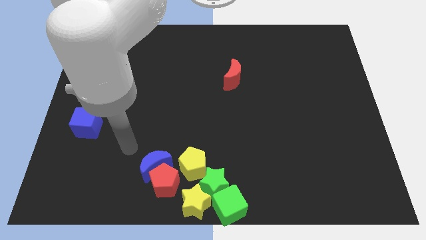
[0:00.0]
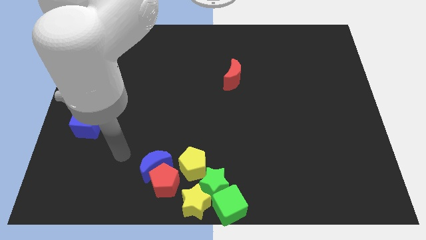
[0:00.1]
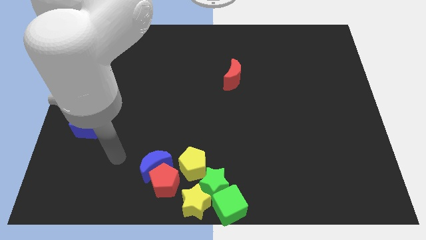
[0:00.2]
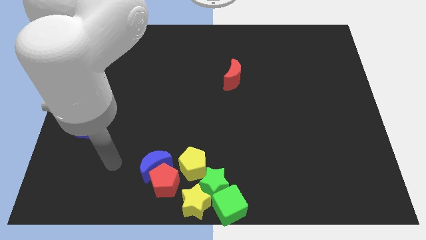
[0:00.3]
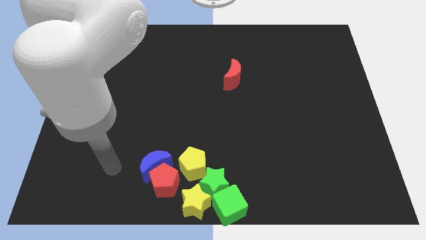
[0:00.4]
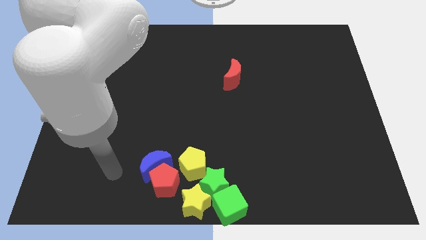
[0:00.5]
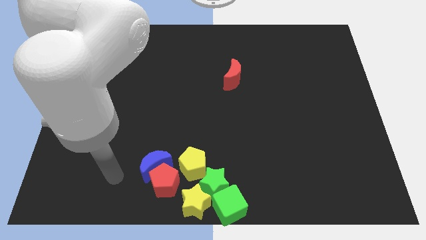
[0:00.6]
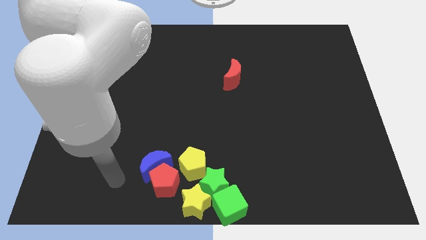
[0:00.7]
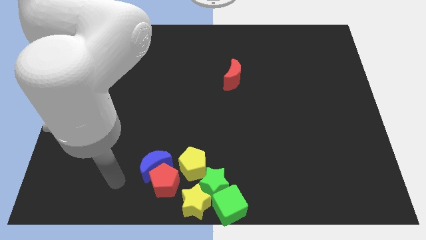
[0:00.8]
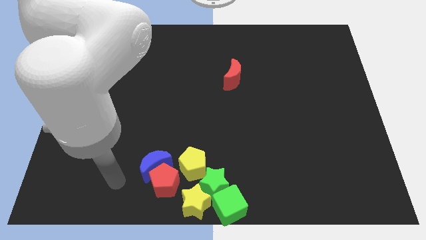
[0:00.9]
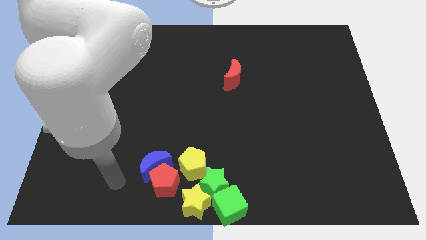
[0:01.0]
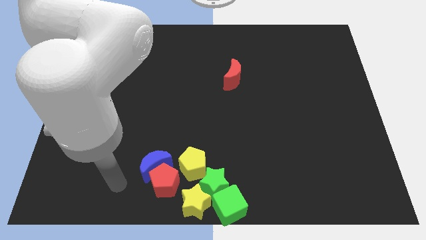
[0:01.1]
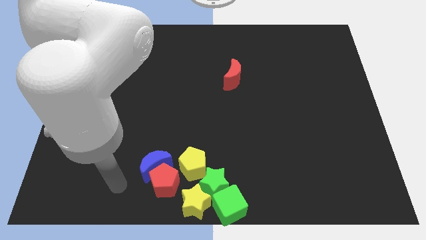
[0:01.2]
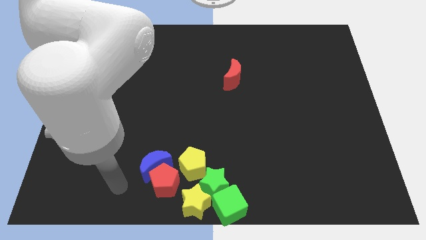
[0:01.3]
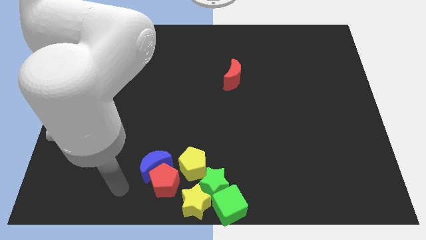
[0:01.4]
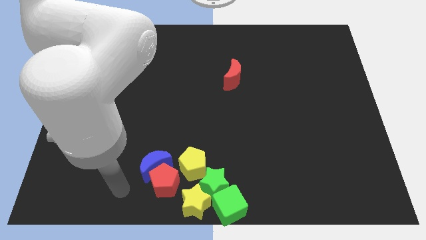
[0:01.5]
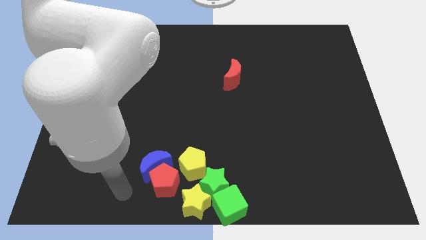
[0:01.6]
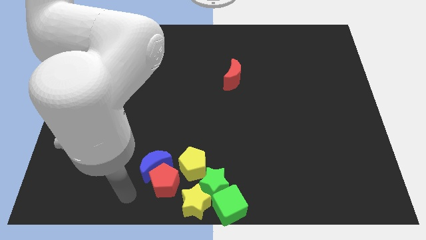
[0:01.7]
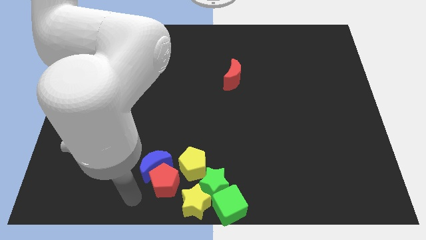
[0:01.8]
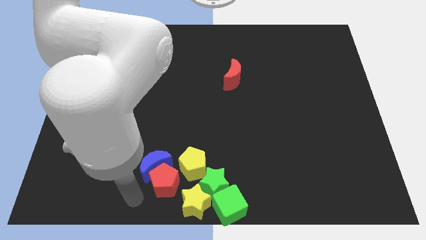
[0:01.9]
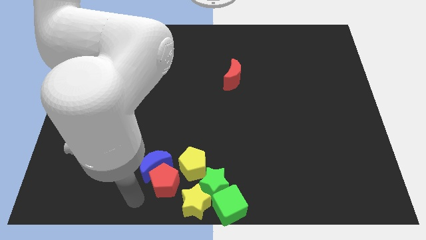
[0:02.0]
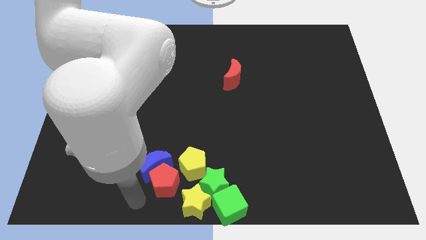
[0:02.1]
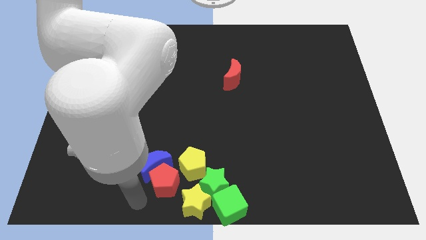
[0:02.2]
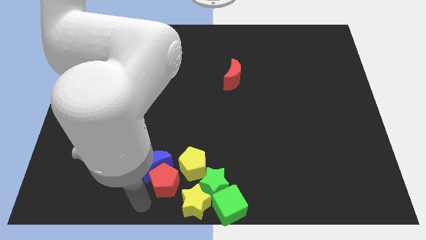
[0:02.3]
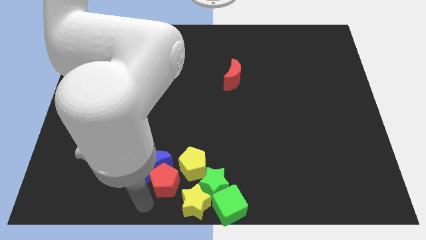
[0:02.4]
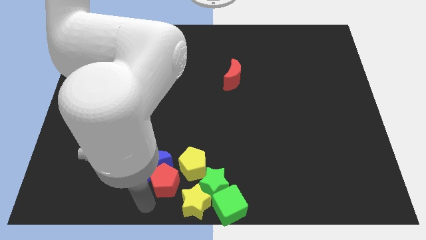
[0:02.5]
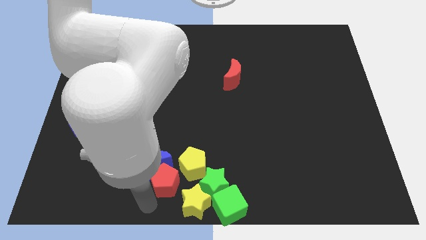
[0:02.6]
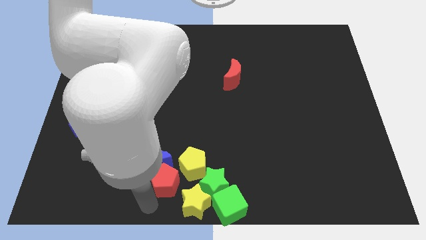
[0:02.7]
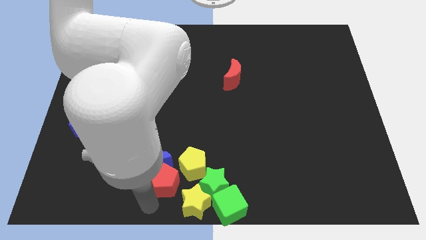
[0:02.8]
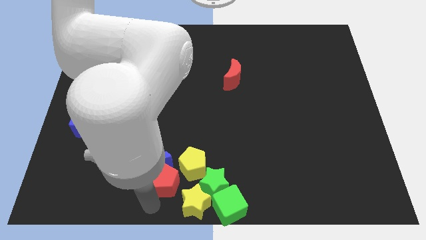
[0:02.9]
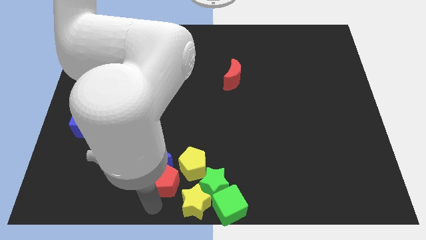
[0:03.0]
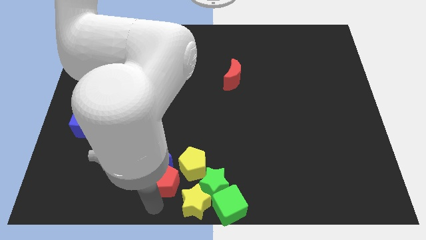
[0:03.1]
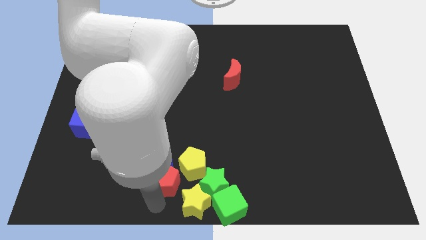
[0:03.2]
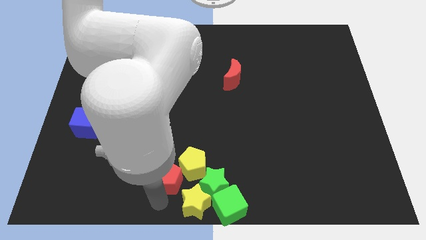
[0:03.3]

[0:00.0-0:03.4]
place the arm under red pentagon

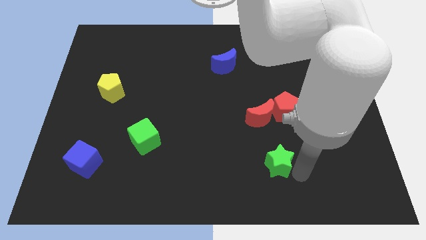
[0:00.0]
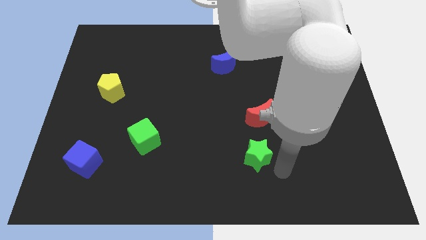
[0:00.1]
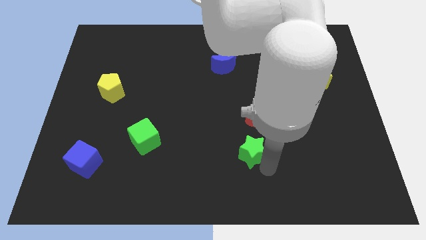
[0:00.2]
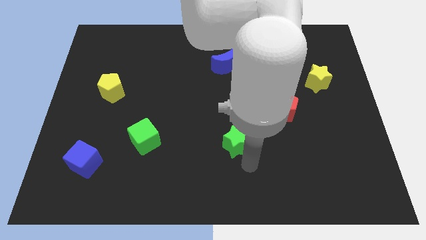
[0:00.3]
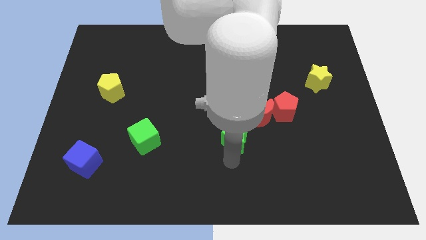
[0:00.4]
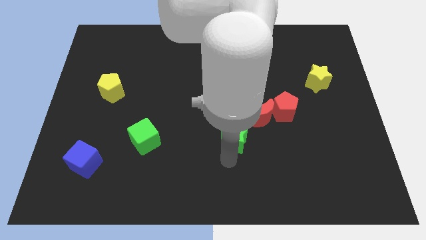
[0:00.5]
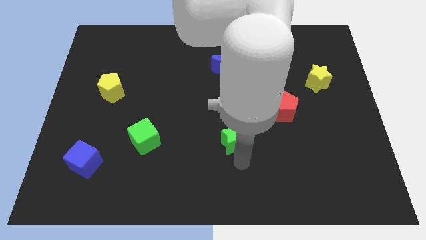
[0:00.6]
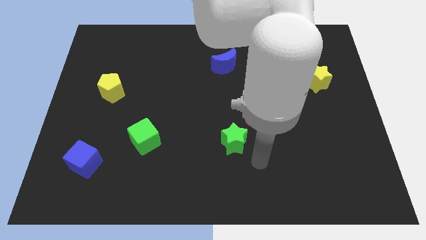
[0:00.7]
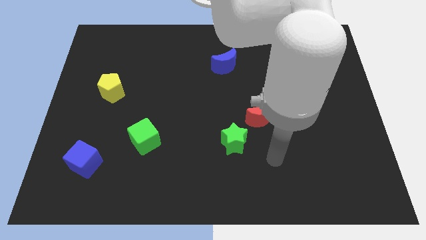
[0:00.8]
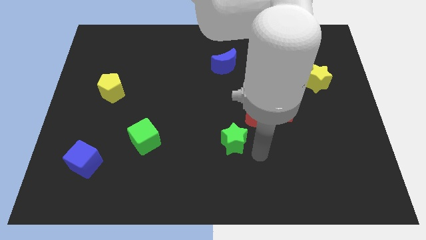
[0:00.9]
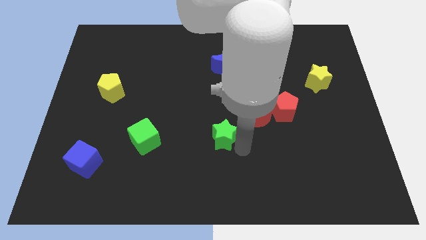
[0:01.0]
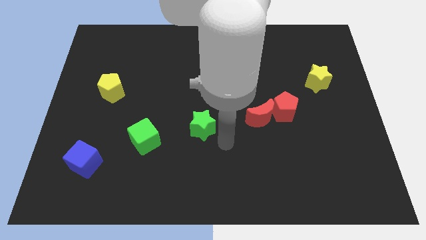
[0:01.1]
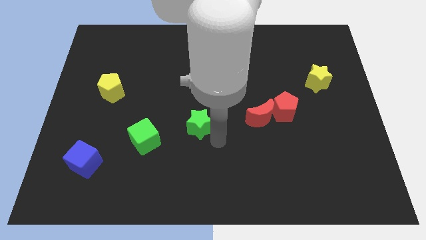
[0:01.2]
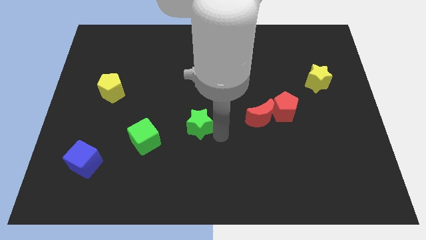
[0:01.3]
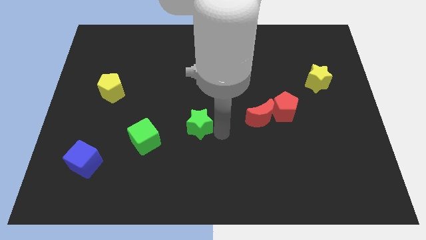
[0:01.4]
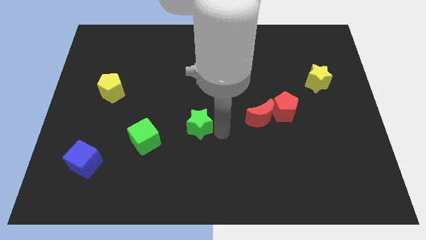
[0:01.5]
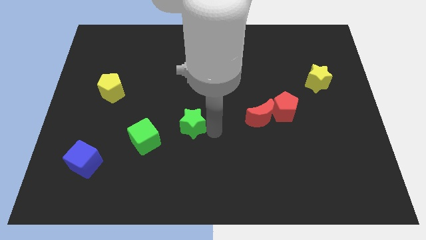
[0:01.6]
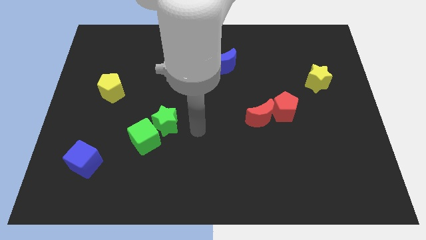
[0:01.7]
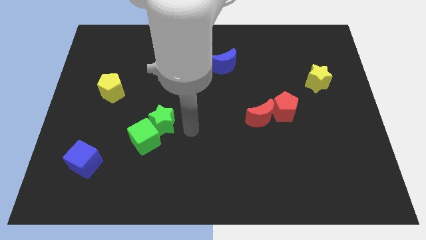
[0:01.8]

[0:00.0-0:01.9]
push the green star close to the green cube

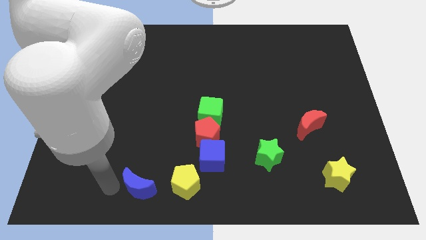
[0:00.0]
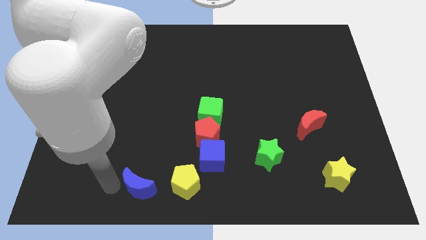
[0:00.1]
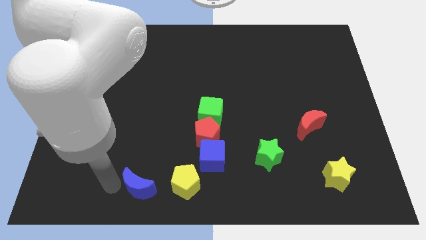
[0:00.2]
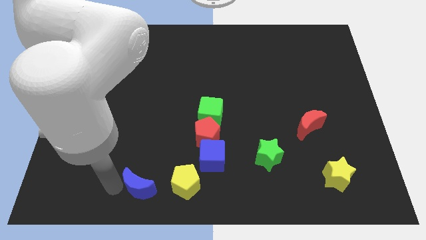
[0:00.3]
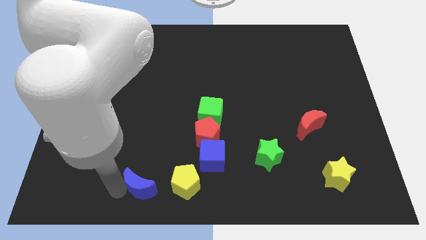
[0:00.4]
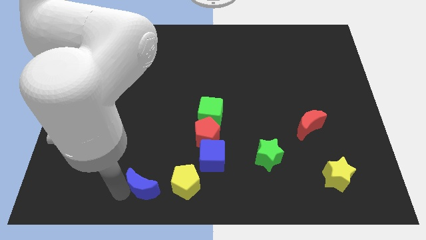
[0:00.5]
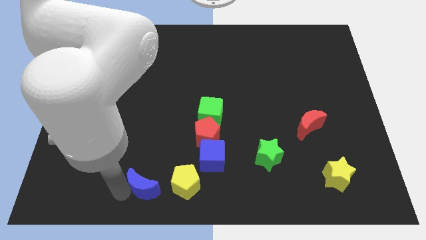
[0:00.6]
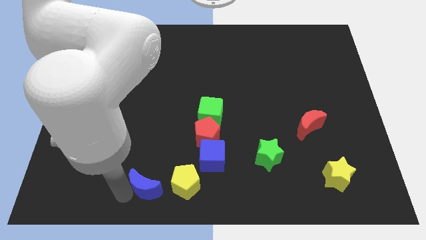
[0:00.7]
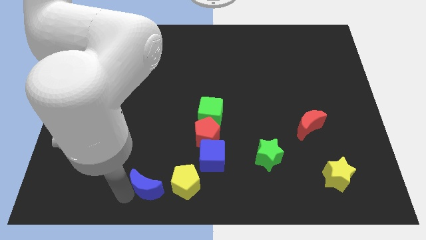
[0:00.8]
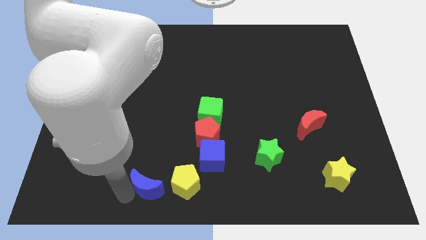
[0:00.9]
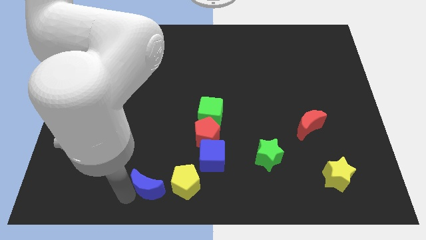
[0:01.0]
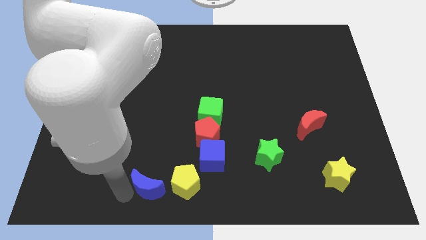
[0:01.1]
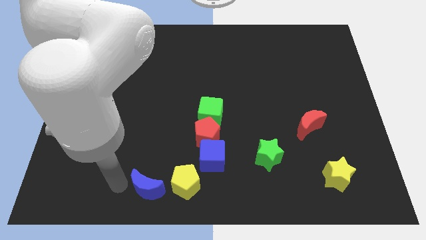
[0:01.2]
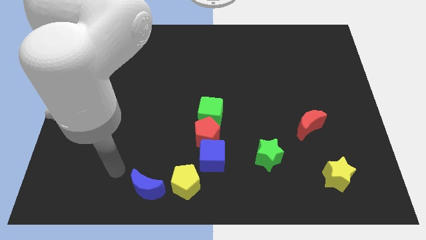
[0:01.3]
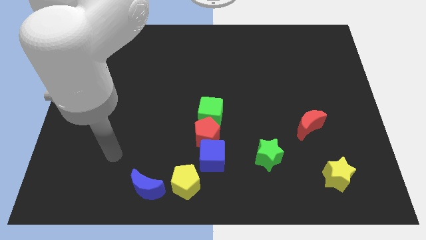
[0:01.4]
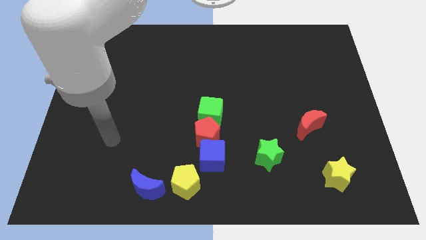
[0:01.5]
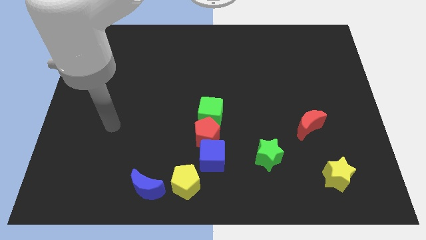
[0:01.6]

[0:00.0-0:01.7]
place blue moon close to the yellow pentagon

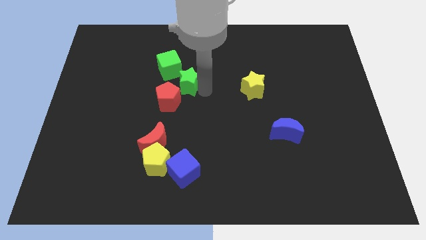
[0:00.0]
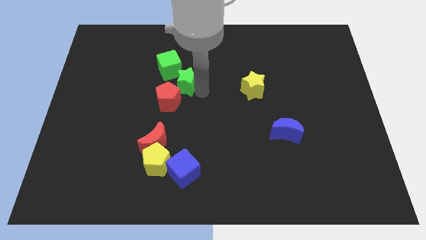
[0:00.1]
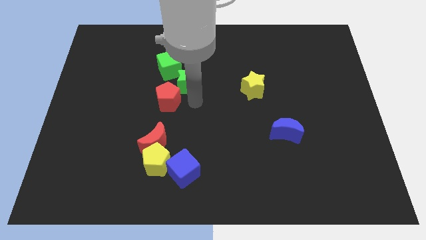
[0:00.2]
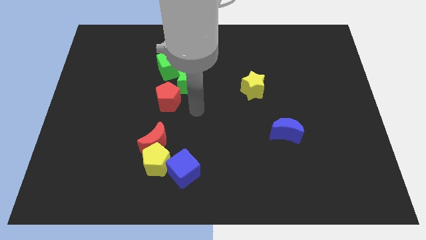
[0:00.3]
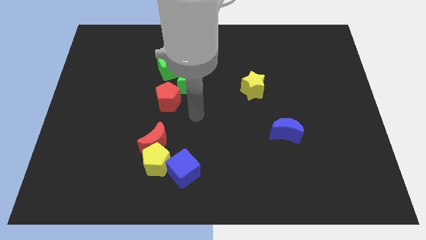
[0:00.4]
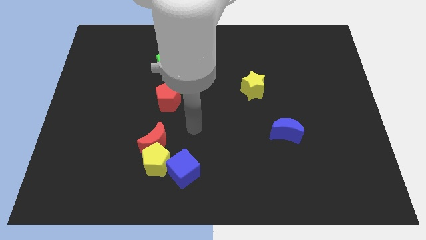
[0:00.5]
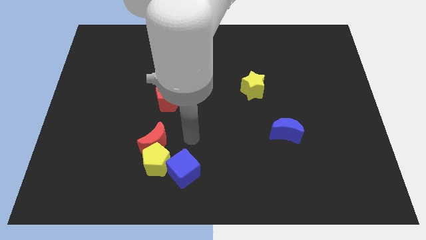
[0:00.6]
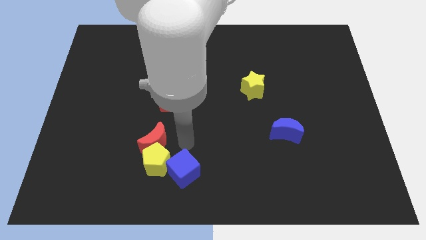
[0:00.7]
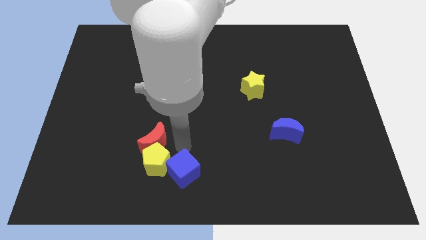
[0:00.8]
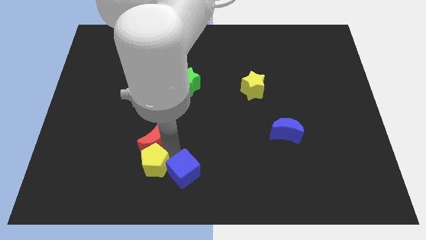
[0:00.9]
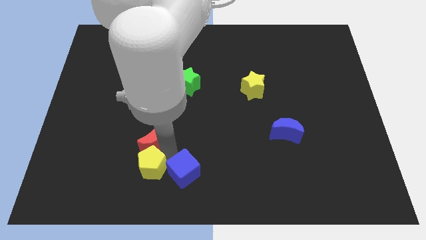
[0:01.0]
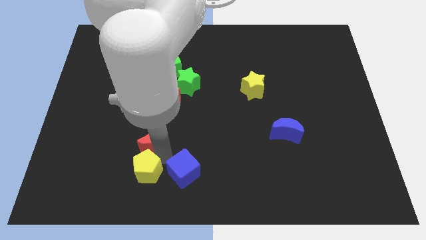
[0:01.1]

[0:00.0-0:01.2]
separate the yellow pentagon from the blue cube

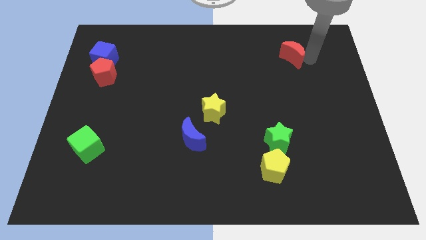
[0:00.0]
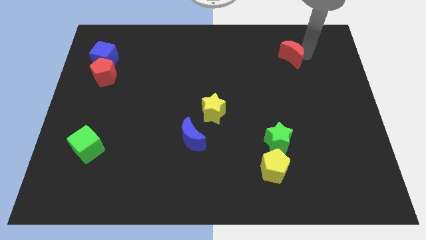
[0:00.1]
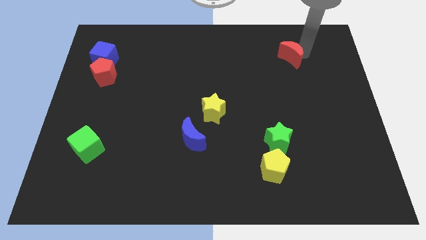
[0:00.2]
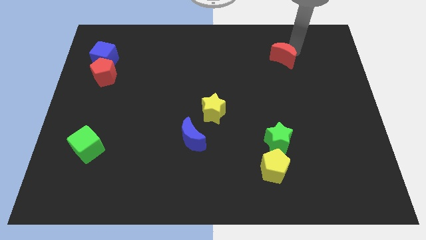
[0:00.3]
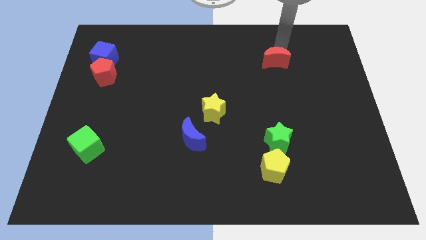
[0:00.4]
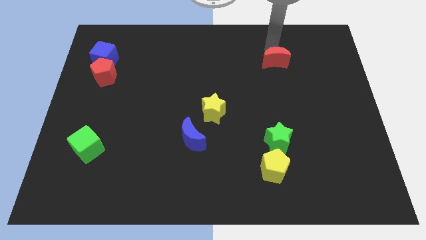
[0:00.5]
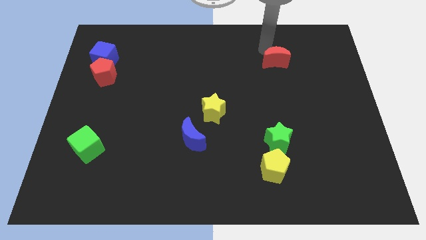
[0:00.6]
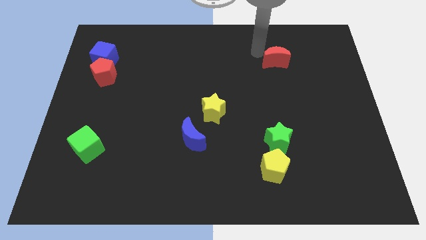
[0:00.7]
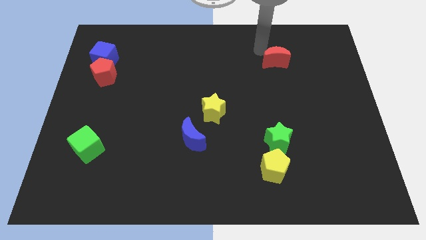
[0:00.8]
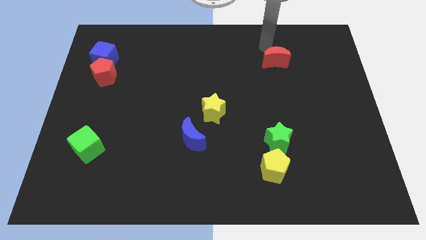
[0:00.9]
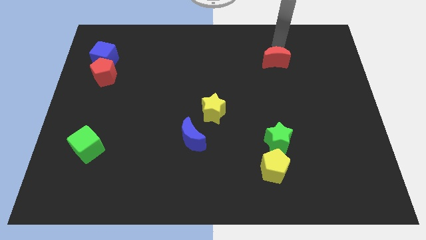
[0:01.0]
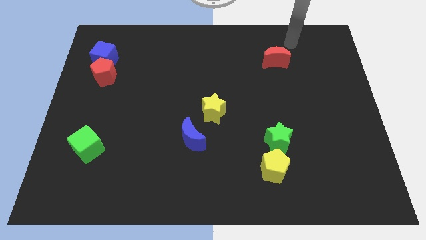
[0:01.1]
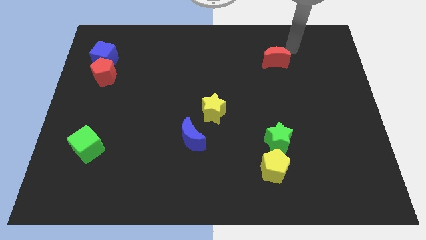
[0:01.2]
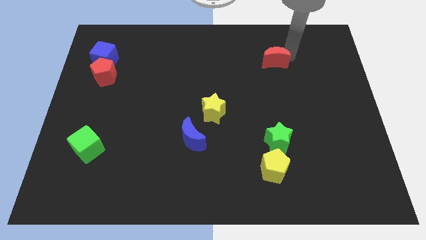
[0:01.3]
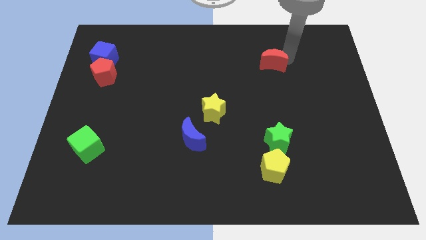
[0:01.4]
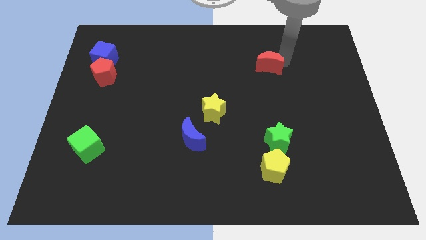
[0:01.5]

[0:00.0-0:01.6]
move slightly to the top side of the yellow pentagon
